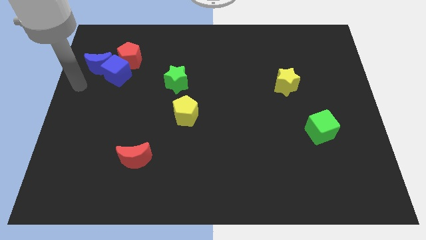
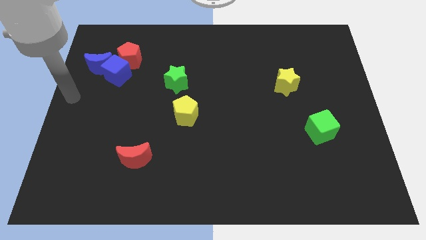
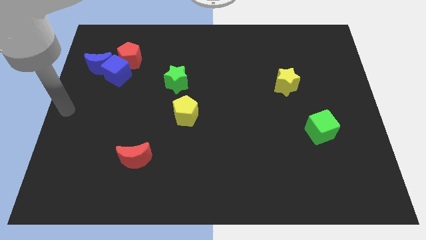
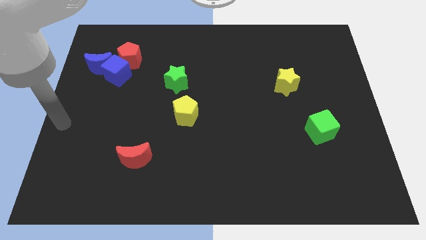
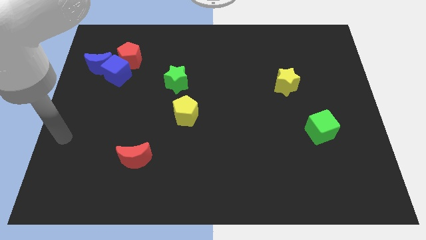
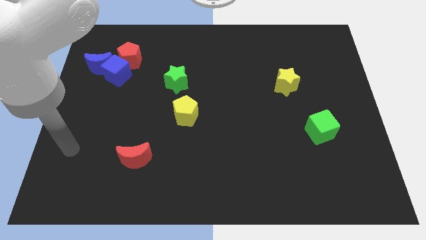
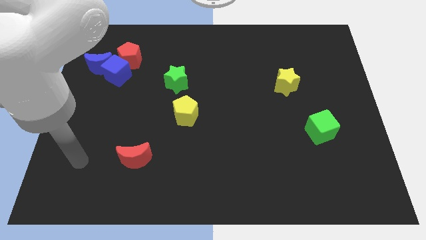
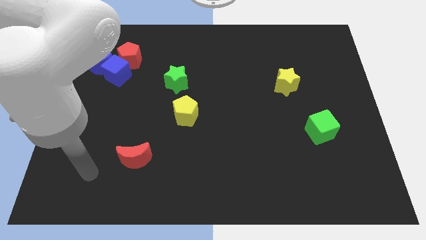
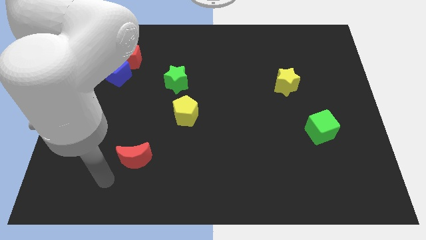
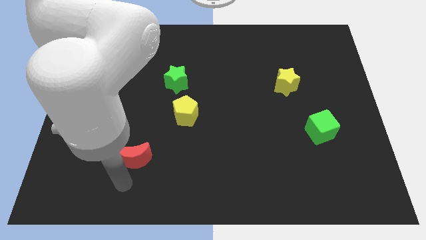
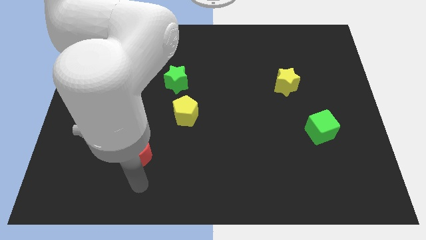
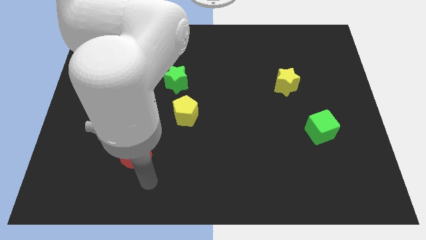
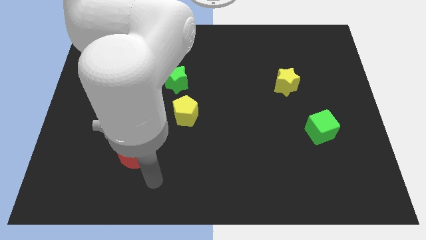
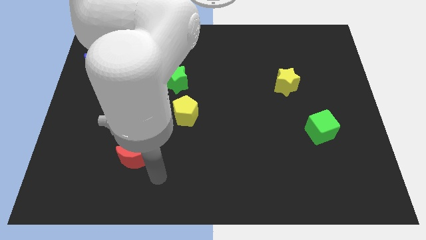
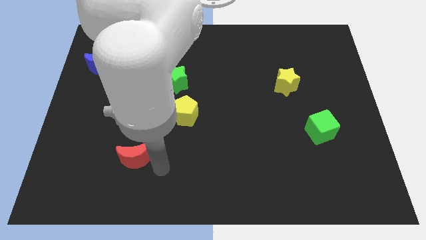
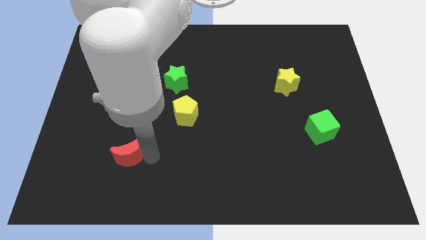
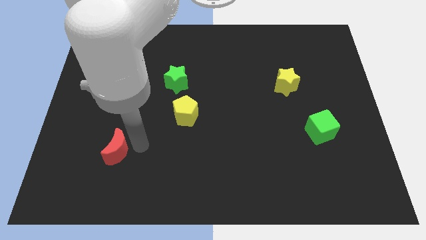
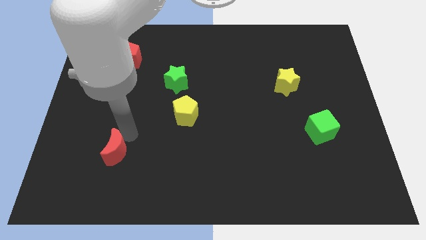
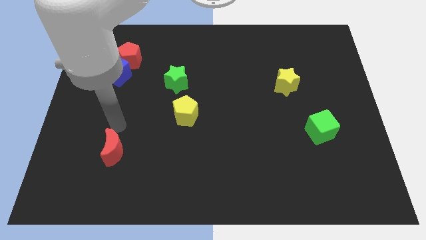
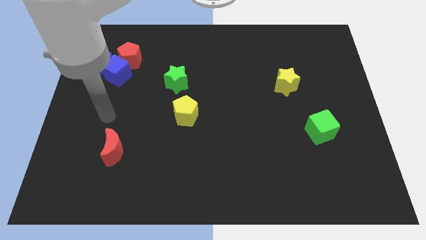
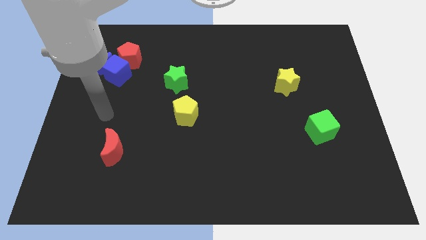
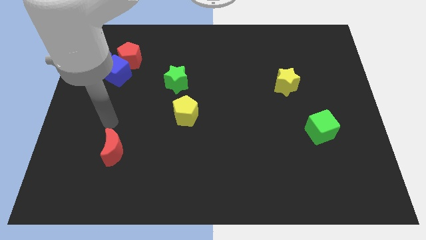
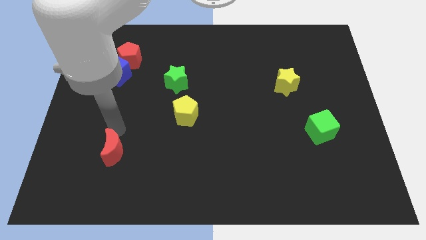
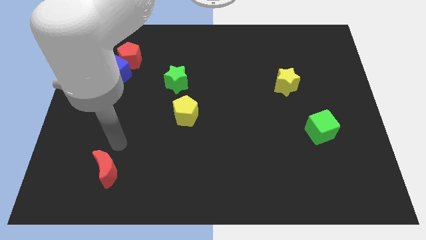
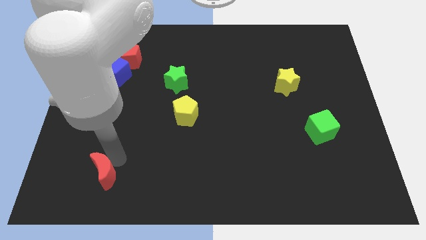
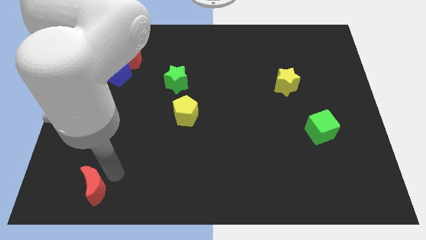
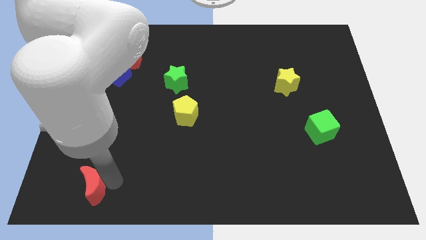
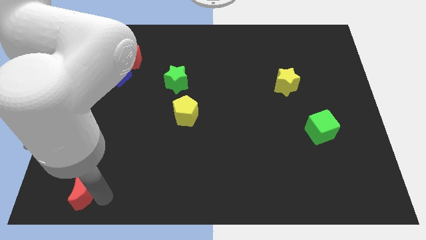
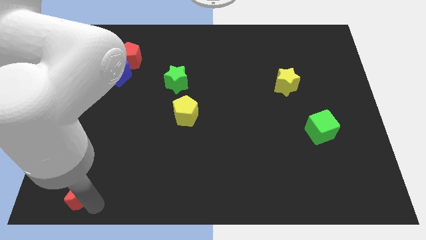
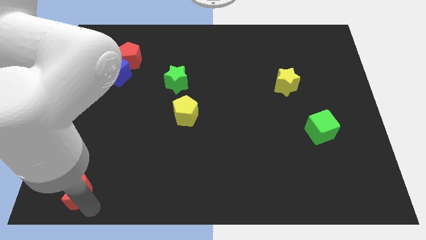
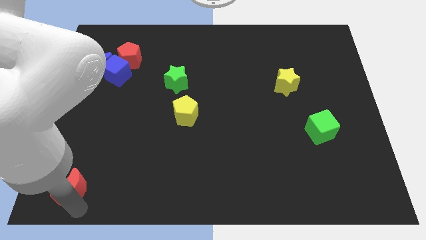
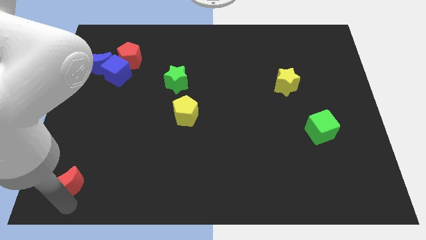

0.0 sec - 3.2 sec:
place red moon to the bottom left corner of the board

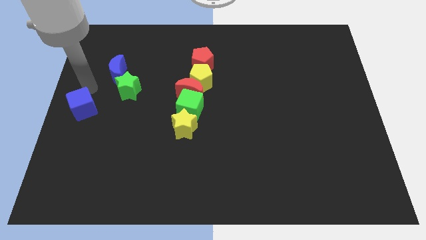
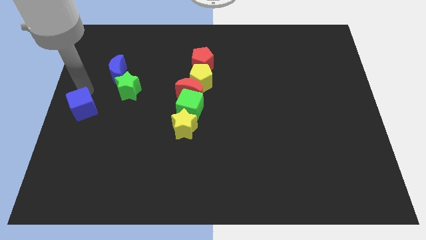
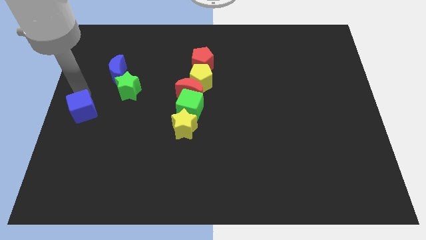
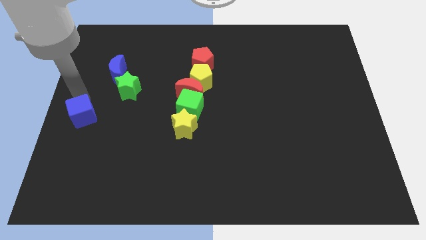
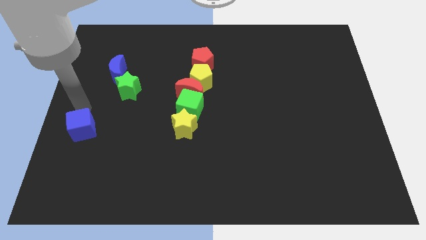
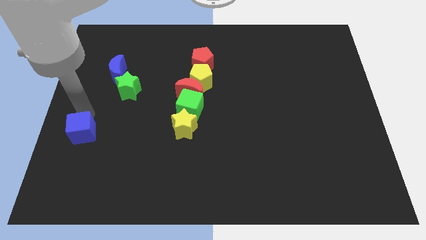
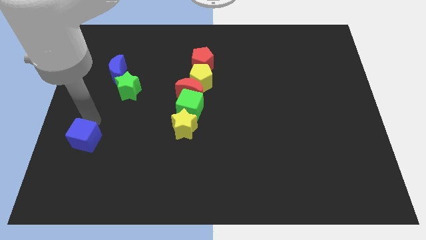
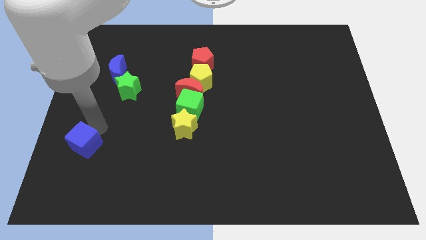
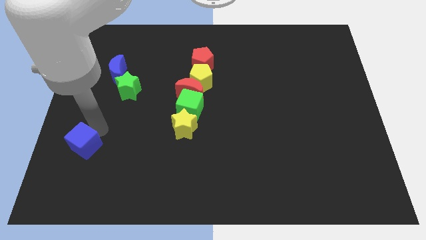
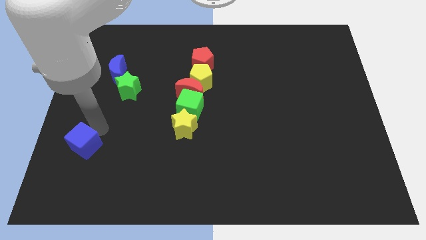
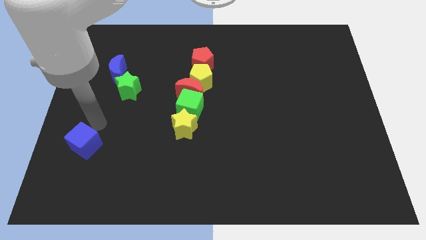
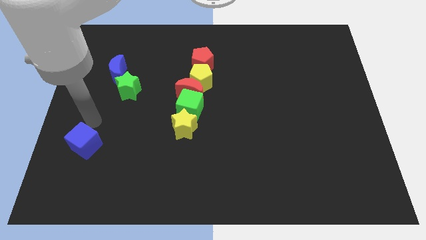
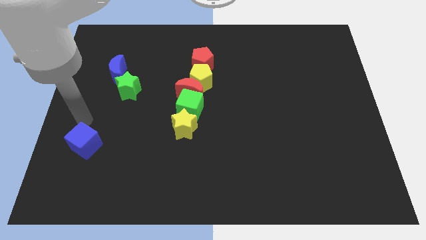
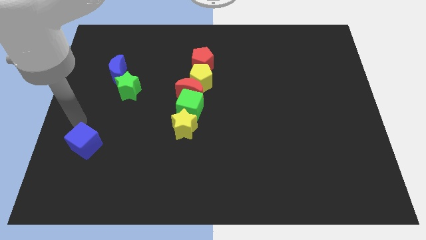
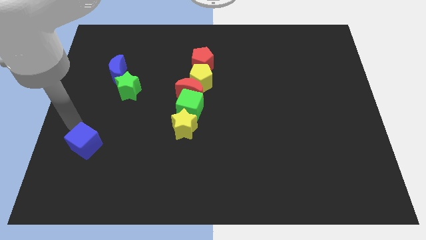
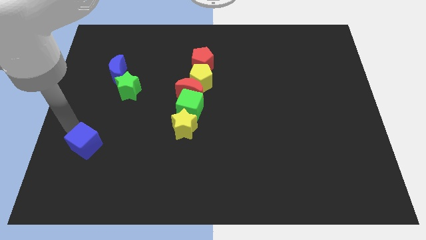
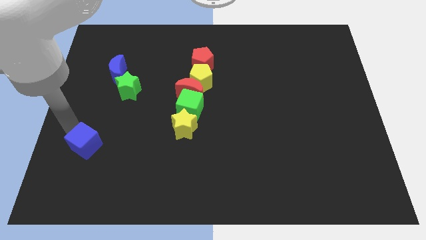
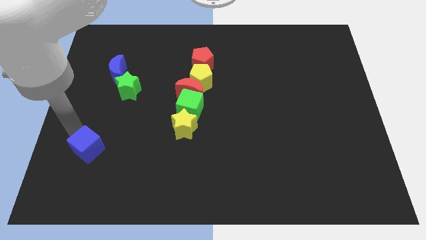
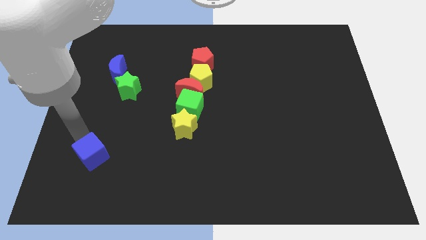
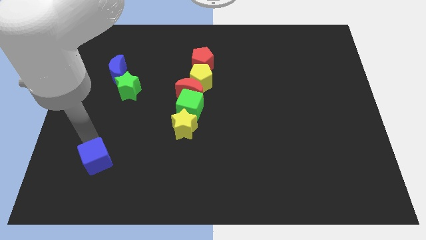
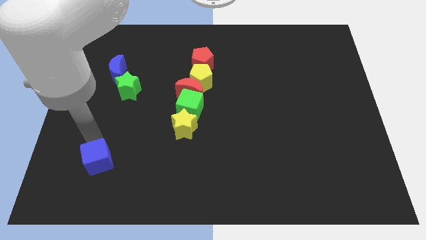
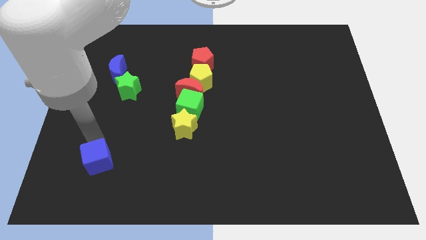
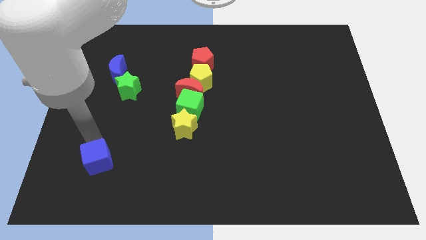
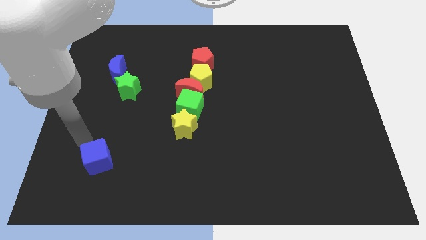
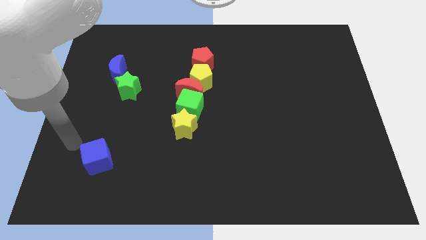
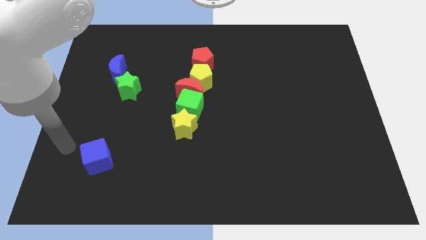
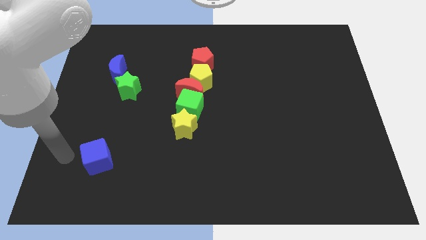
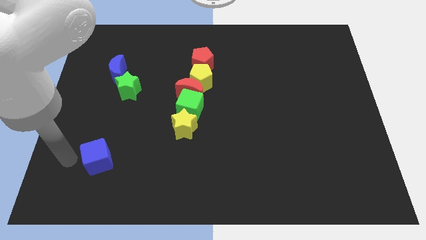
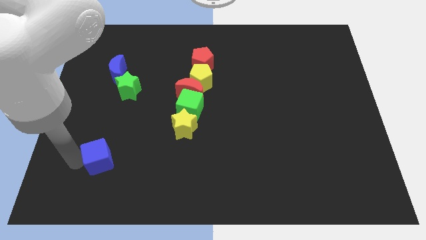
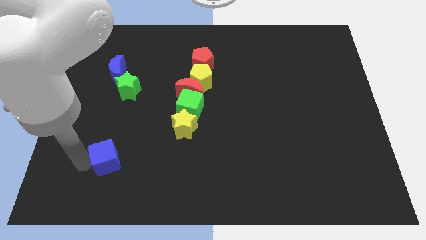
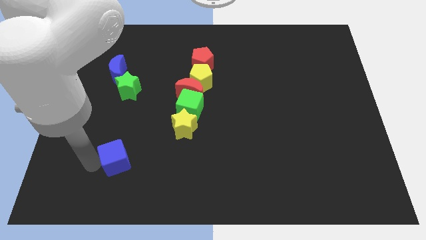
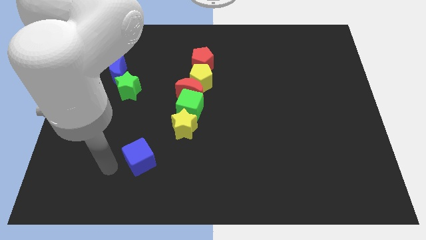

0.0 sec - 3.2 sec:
place blue cube vertical to green star

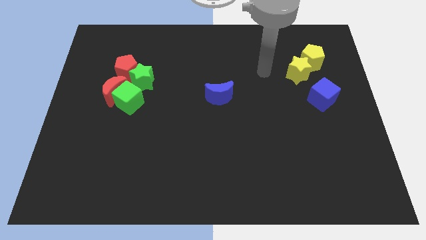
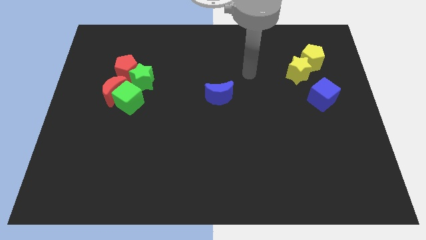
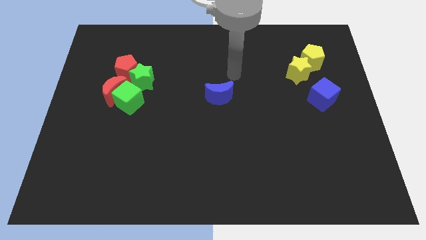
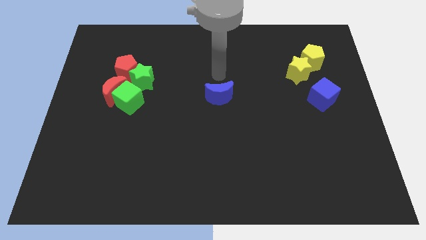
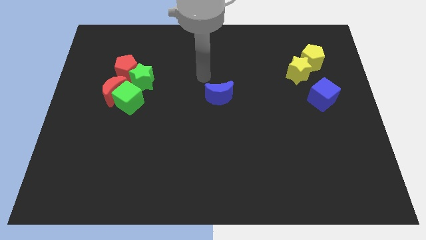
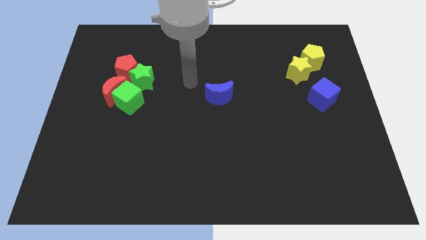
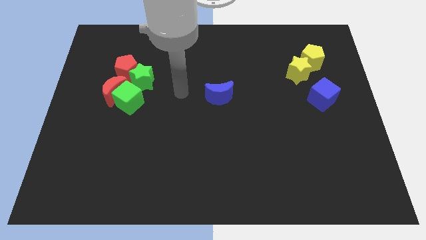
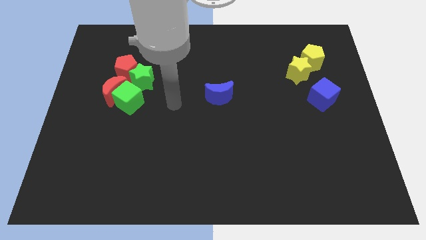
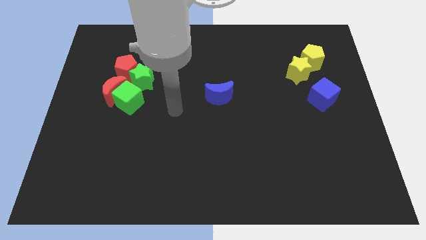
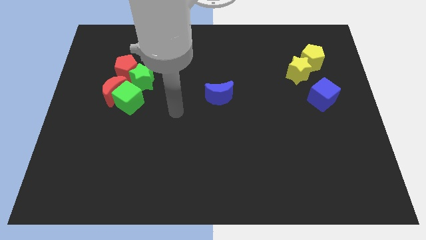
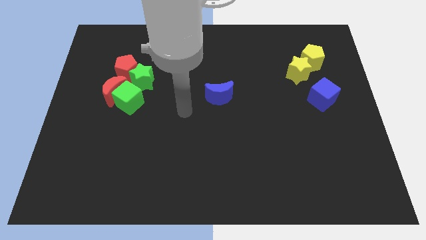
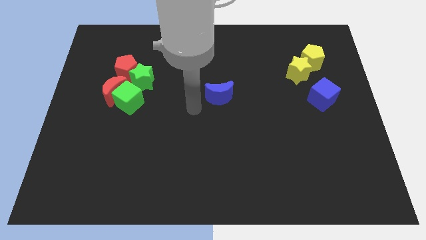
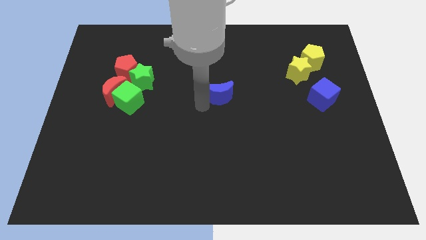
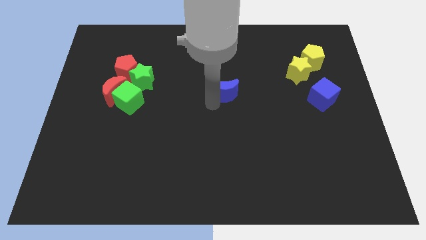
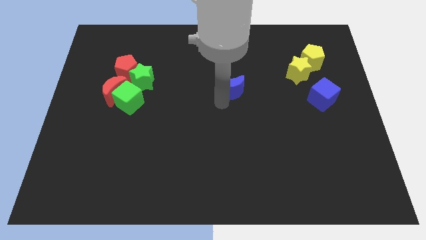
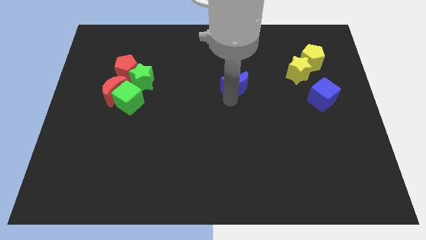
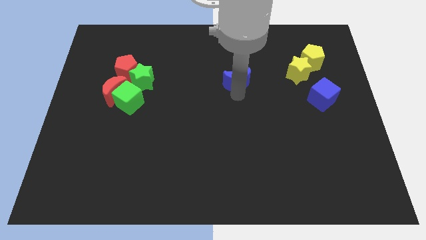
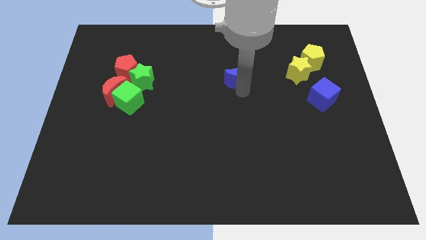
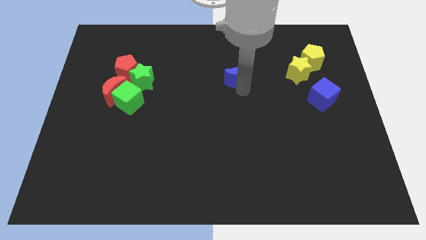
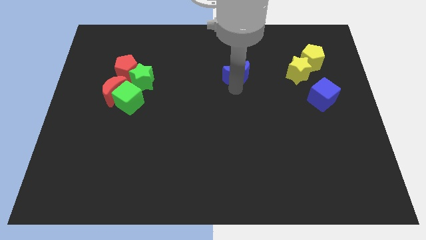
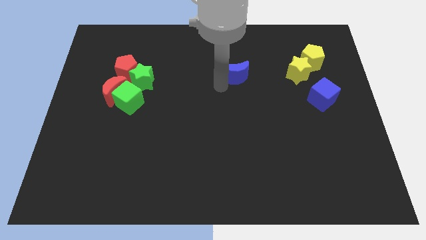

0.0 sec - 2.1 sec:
move the blue moon slightly to the top and to the right

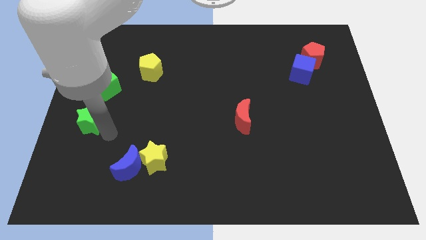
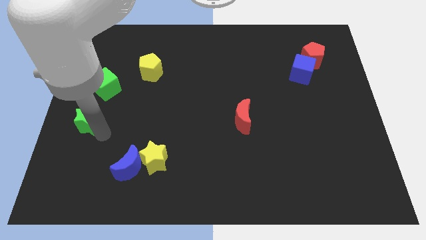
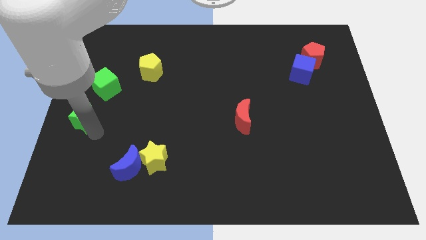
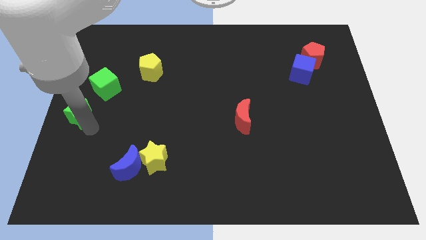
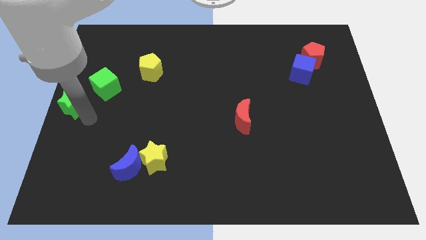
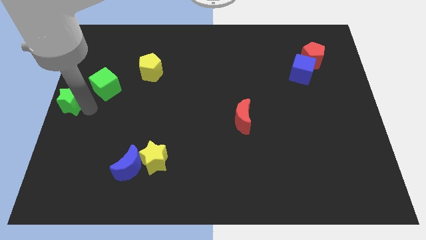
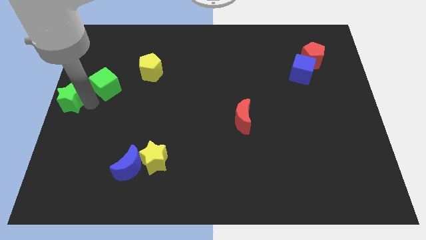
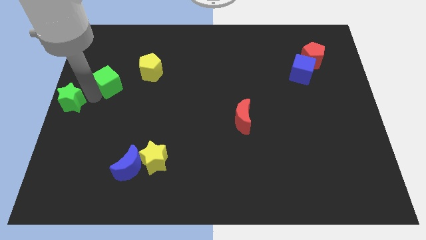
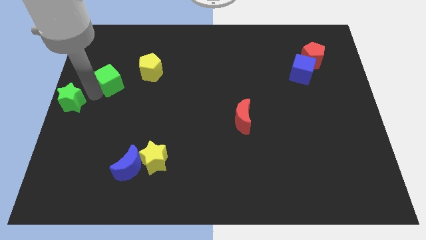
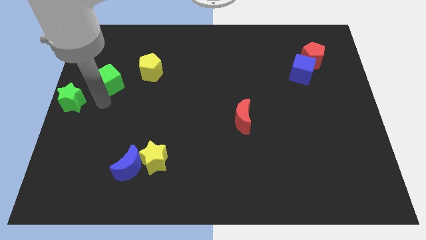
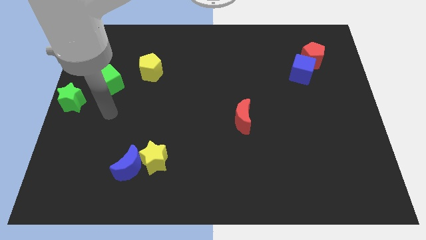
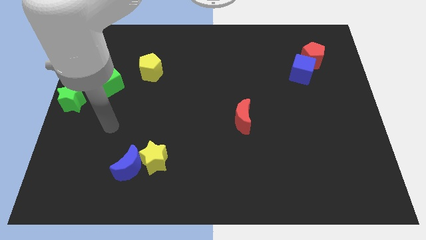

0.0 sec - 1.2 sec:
push the green star to the top
